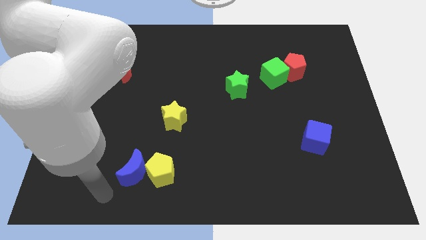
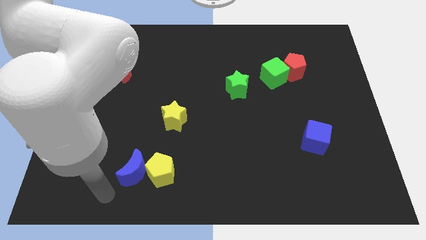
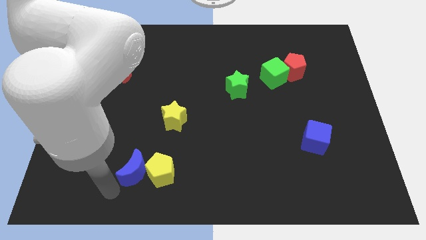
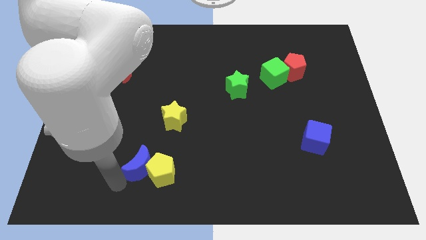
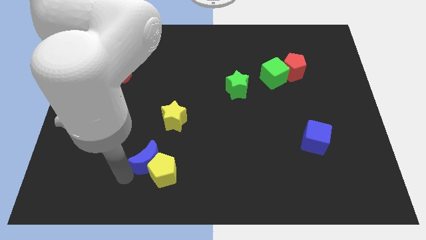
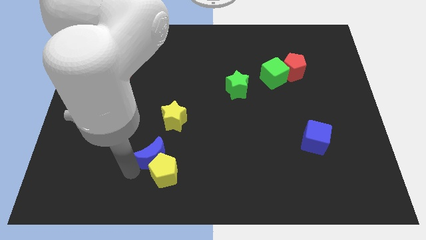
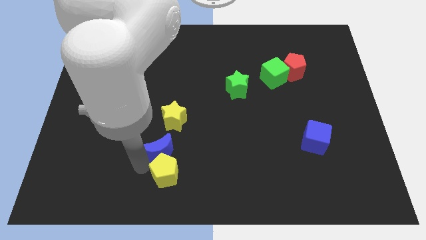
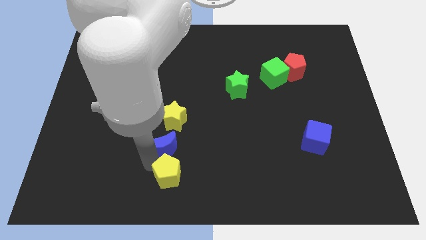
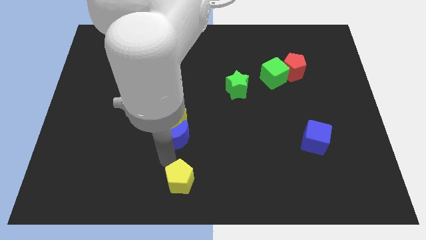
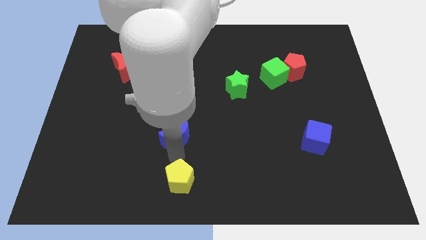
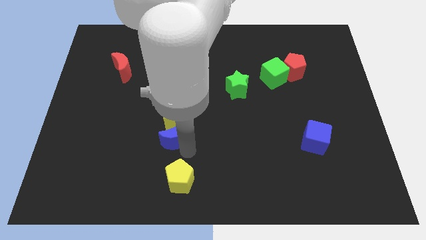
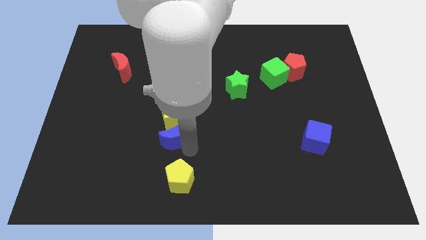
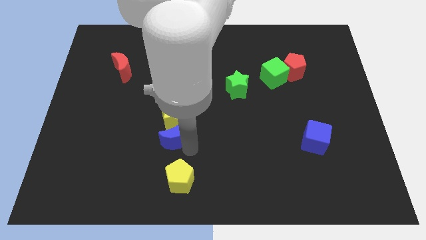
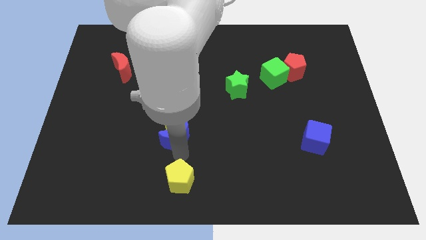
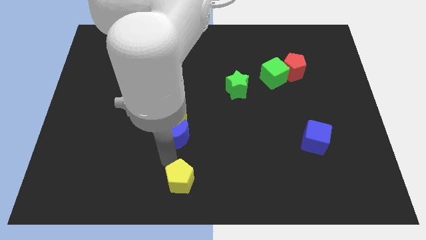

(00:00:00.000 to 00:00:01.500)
separate the blue moon from the yellow pentagon

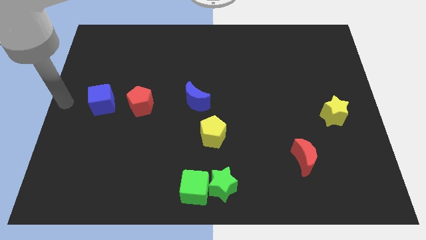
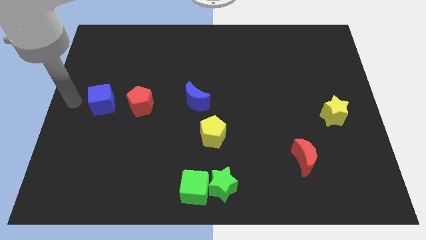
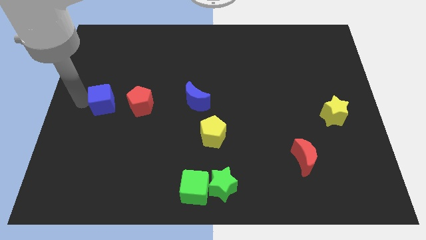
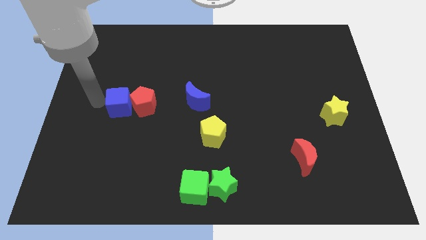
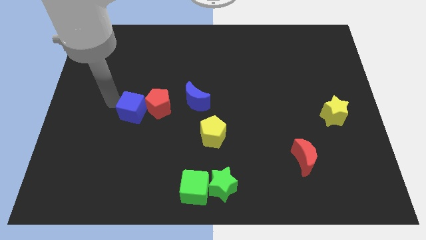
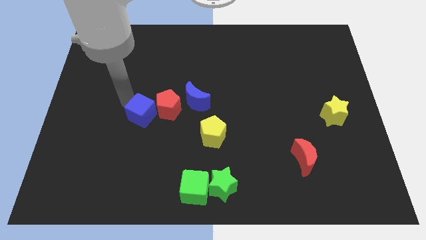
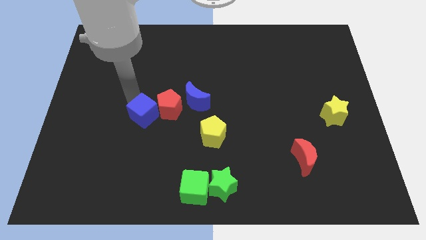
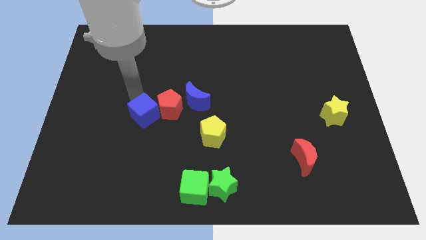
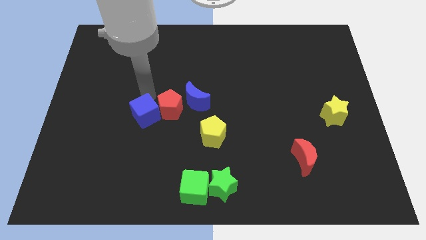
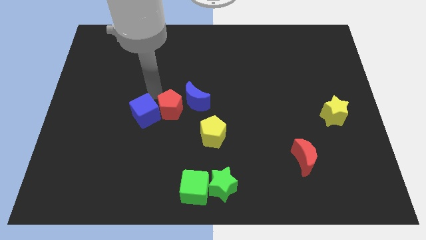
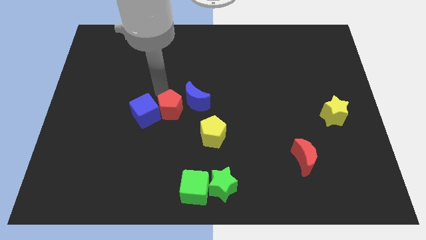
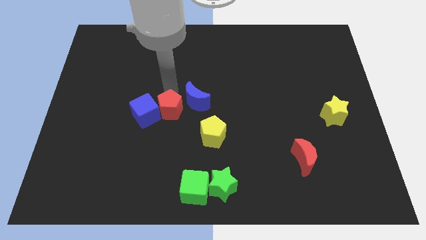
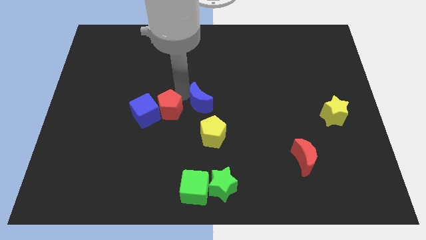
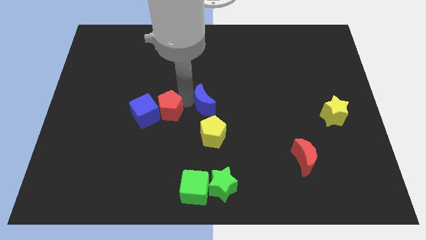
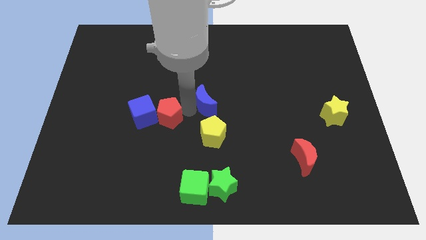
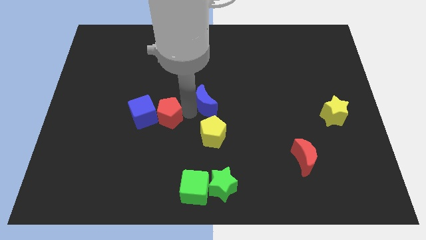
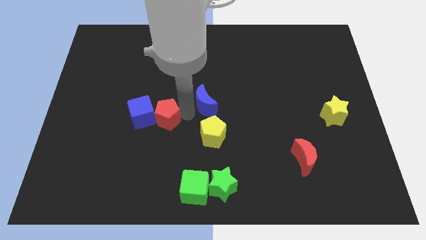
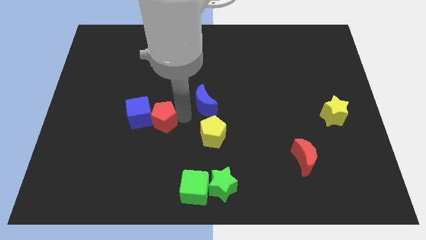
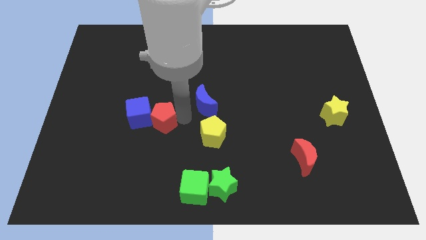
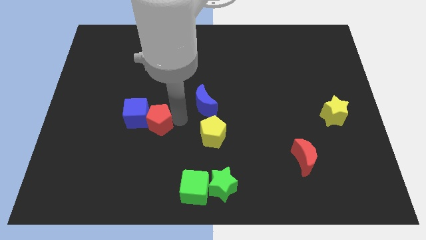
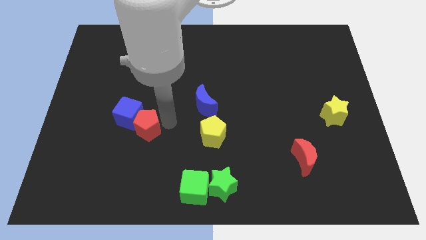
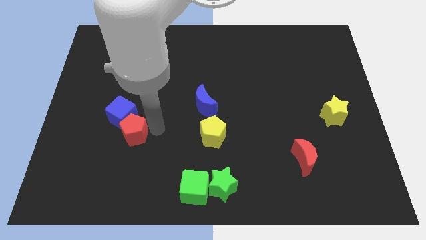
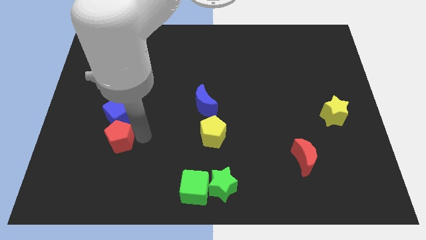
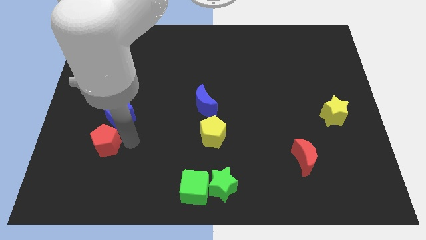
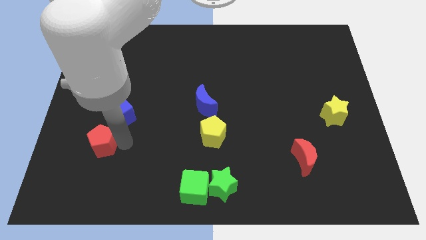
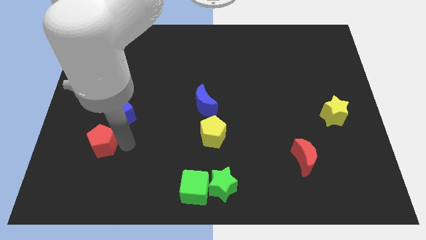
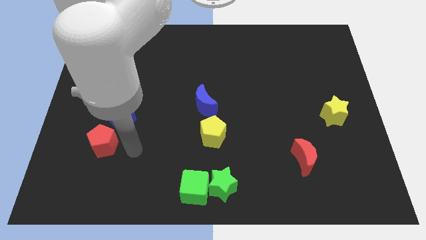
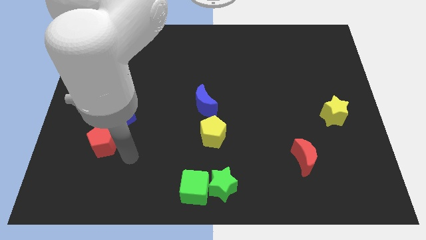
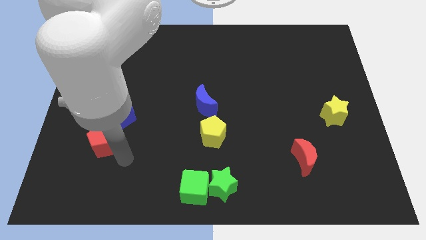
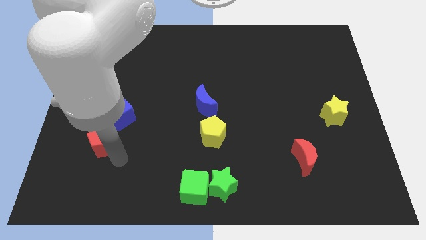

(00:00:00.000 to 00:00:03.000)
move the blue cube and red pentagon center left

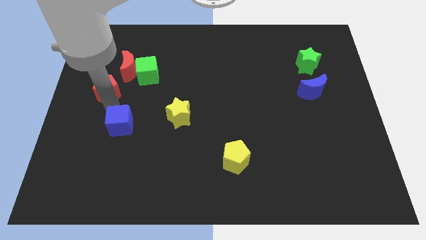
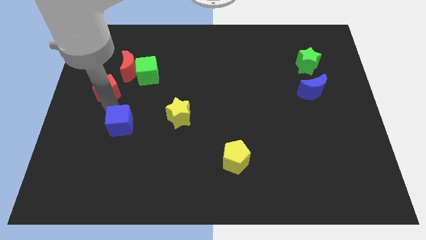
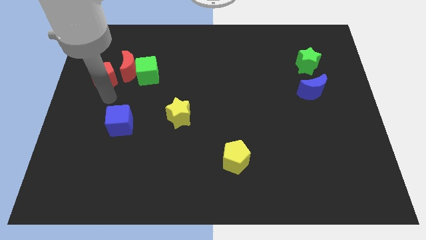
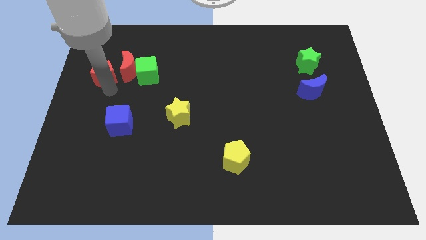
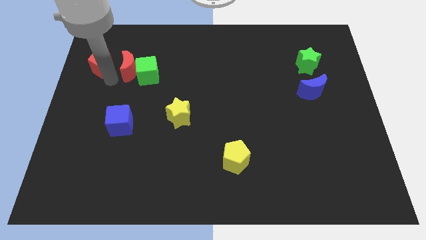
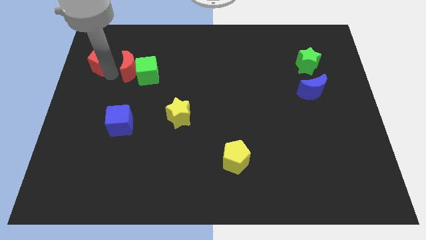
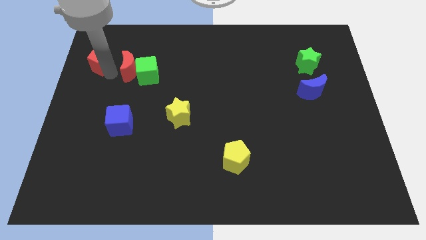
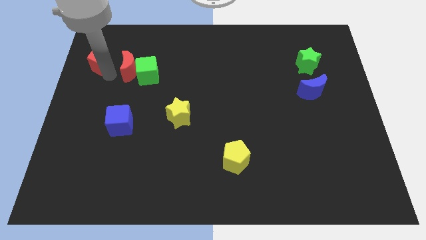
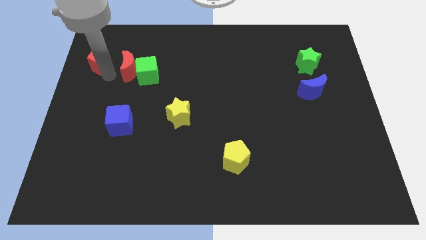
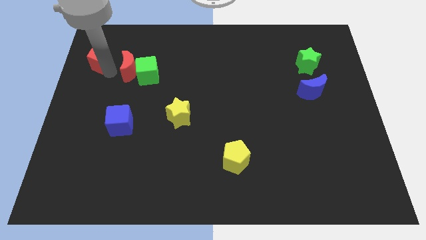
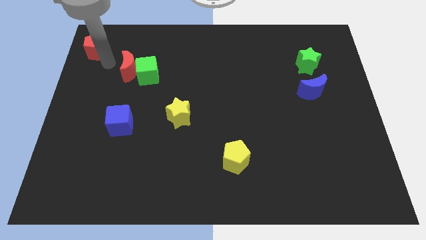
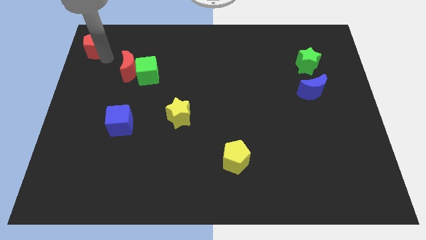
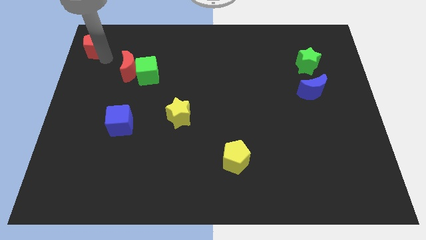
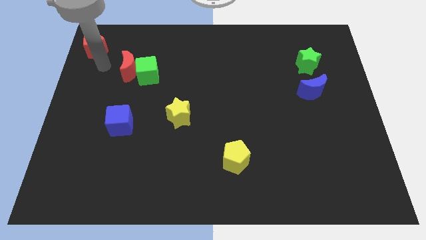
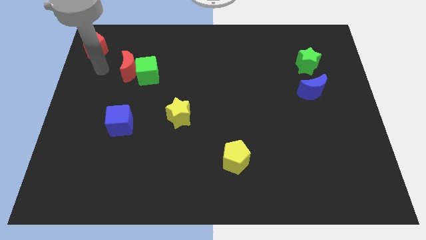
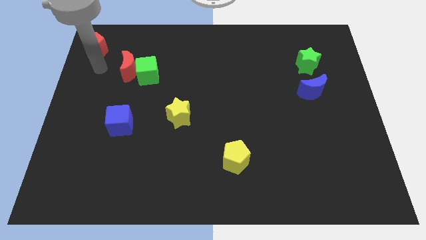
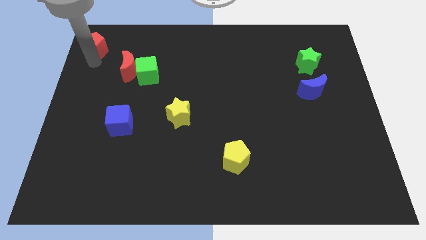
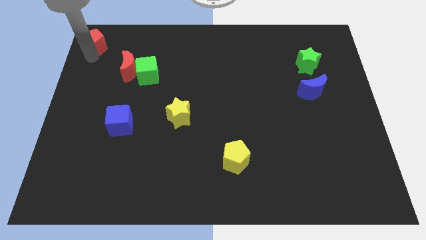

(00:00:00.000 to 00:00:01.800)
push the red pentagon towards the top left

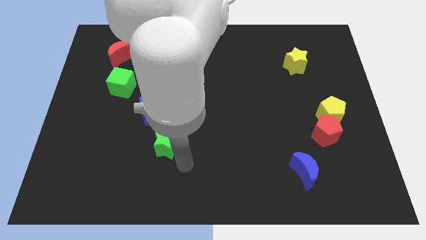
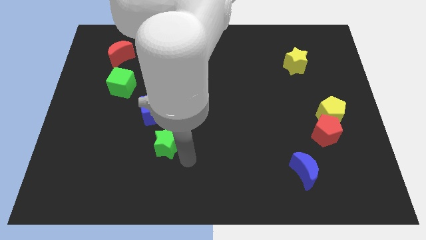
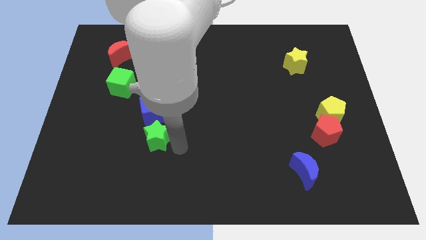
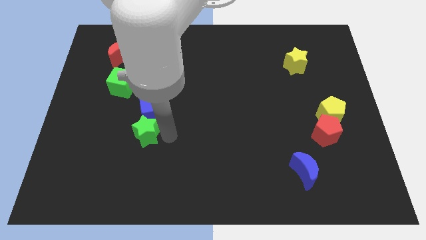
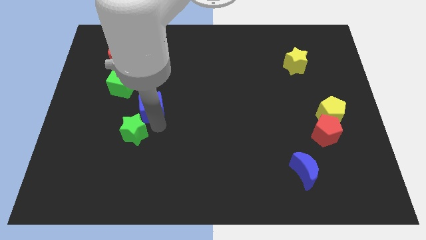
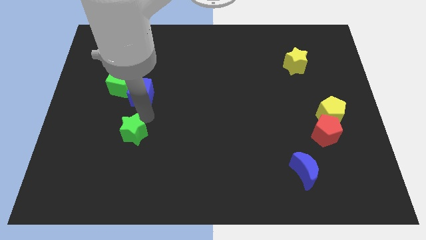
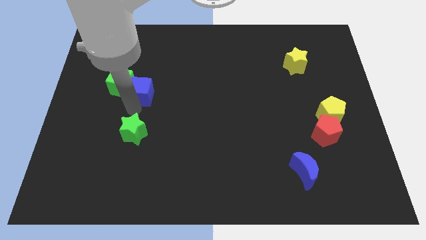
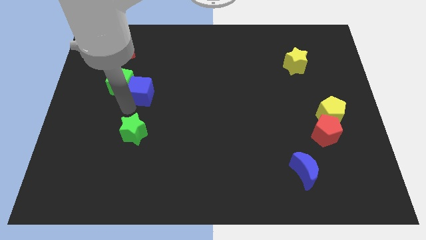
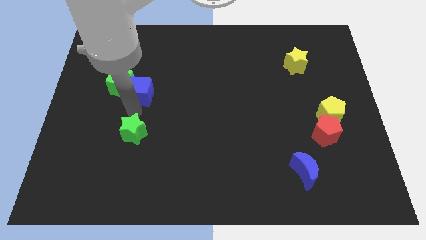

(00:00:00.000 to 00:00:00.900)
place the green star down to the blue cube

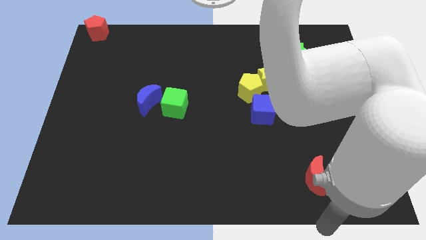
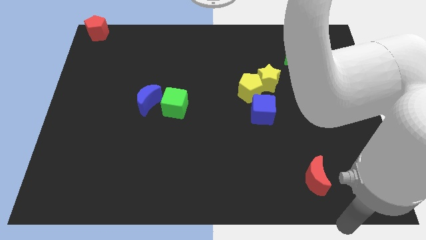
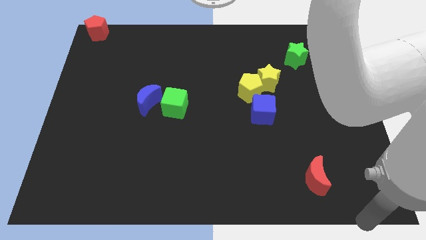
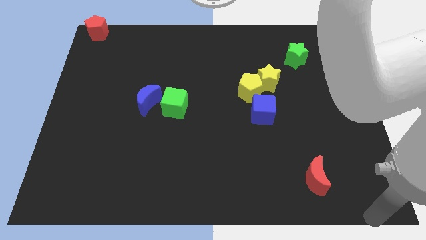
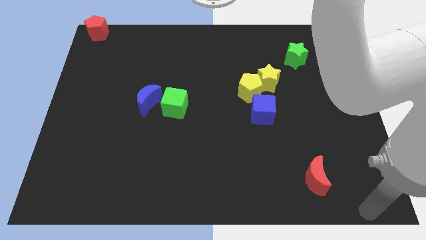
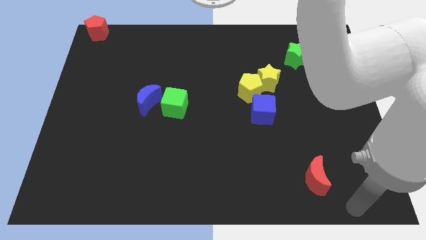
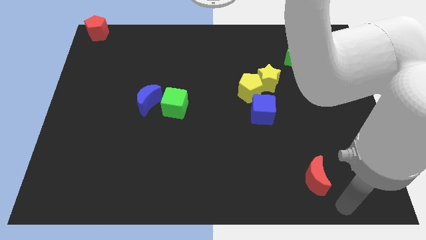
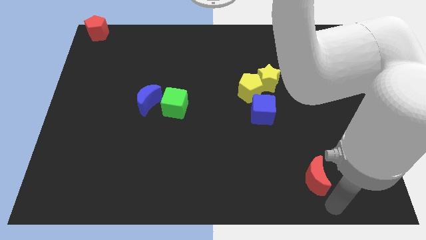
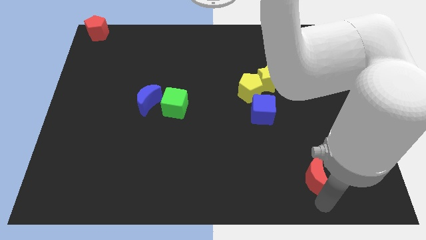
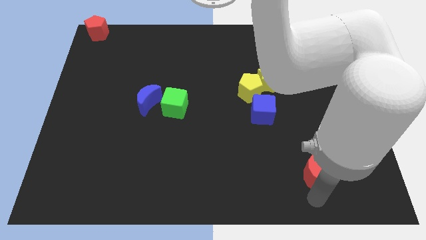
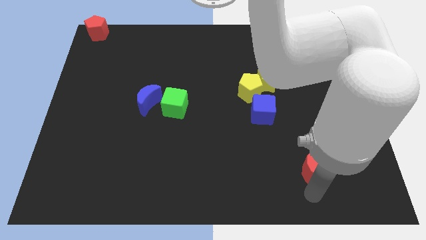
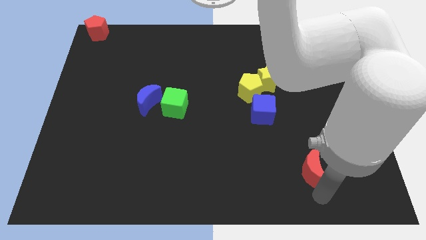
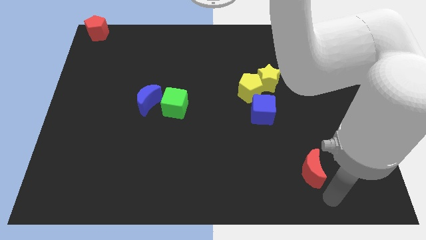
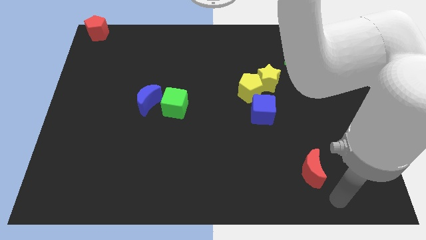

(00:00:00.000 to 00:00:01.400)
slightly push the red crescent to the top of the board

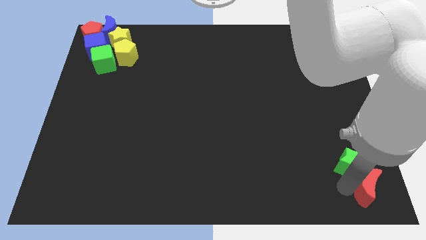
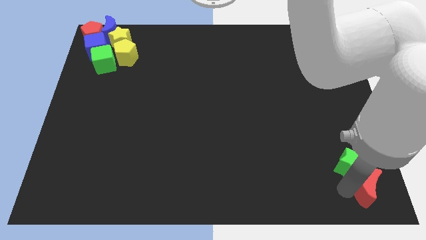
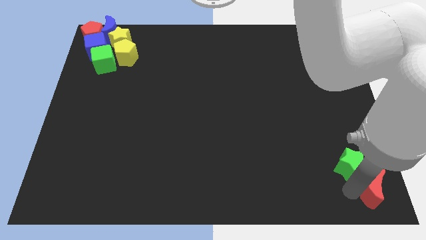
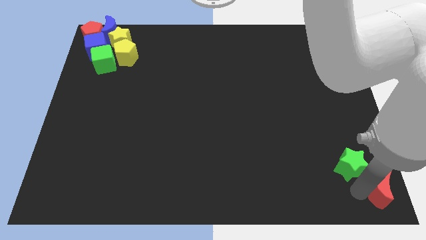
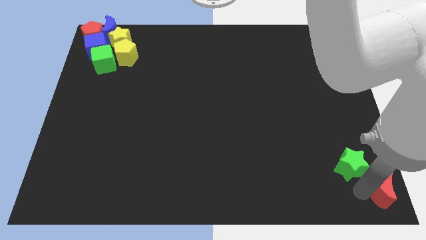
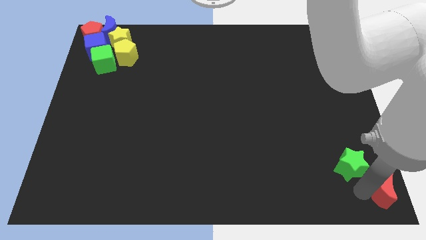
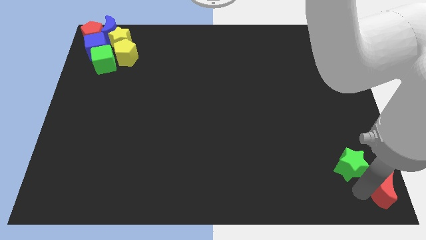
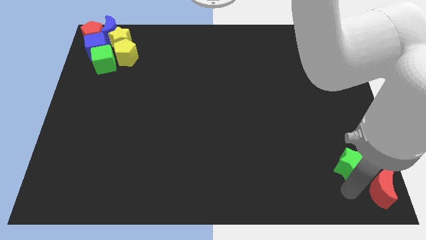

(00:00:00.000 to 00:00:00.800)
push the red crescent to the bottom right of the board
